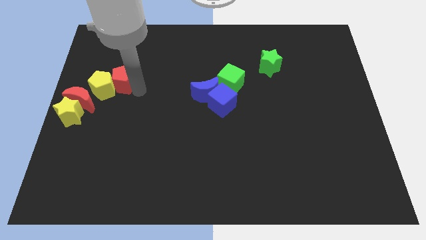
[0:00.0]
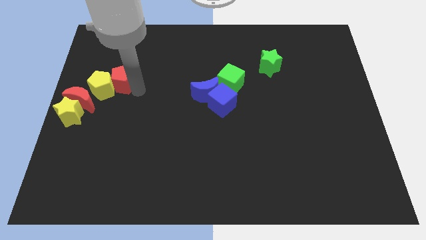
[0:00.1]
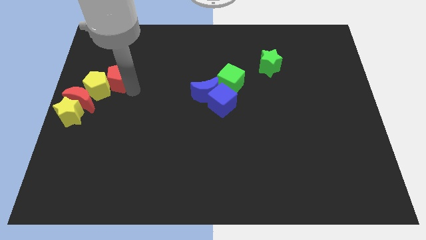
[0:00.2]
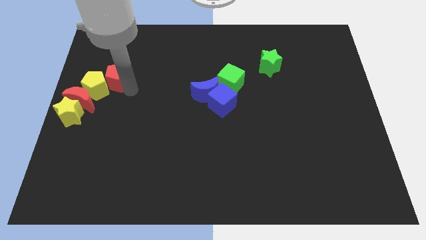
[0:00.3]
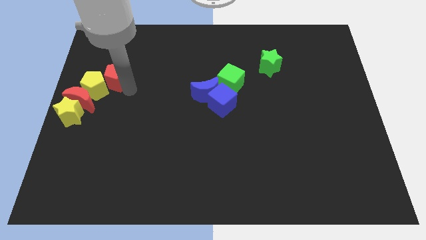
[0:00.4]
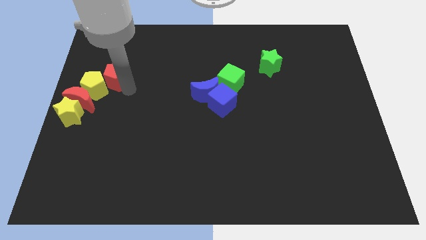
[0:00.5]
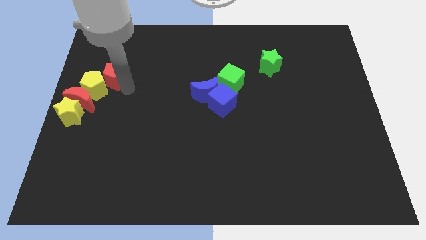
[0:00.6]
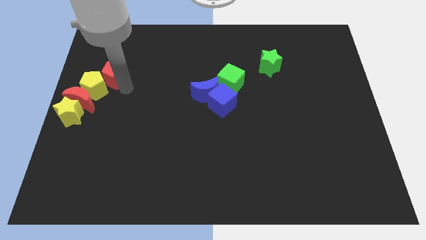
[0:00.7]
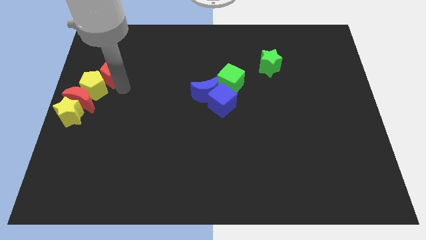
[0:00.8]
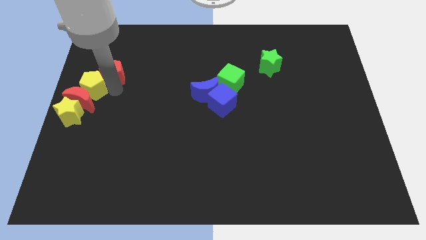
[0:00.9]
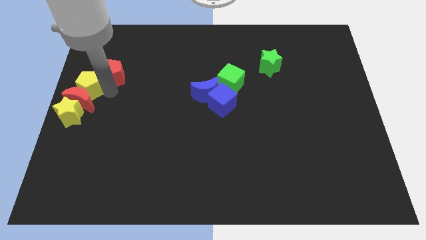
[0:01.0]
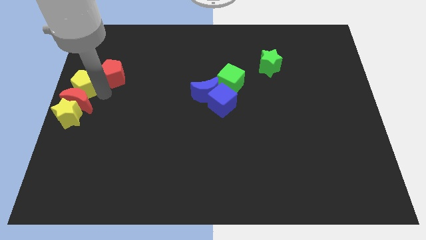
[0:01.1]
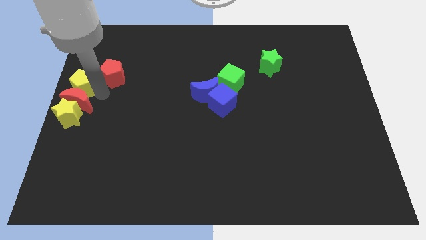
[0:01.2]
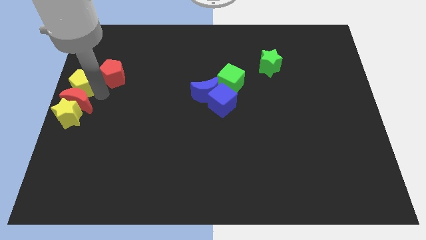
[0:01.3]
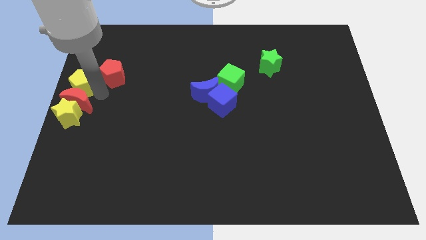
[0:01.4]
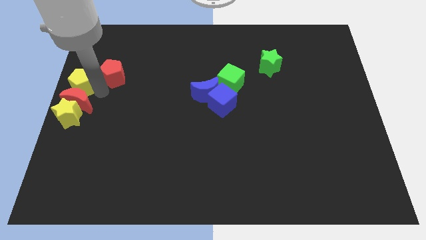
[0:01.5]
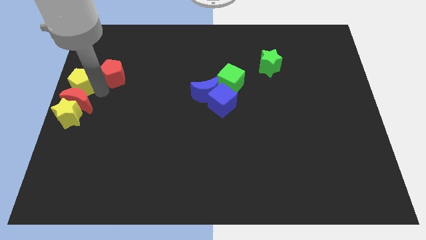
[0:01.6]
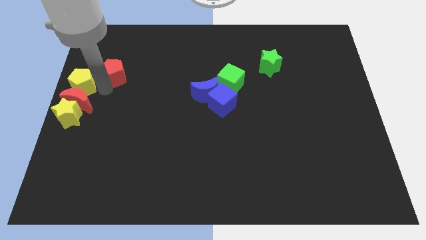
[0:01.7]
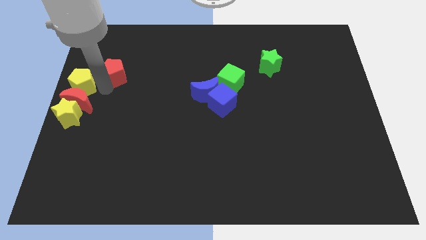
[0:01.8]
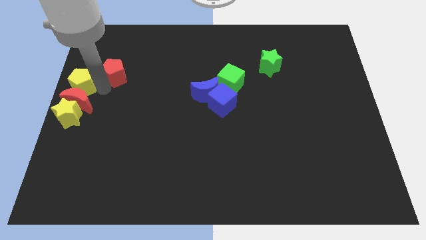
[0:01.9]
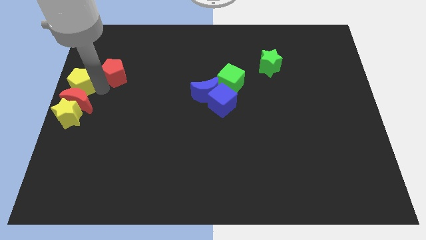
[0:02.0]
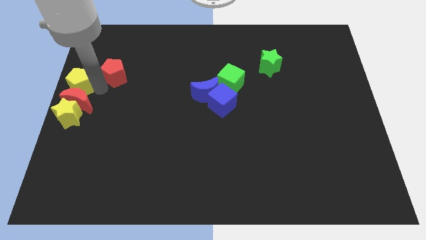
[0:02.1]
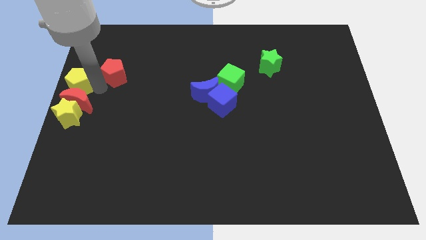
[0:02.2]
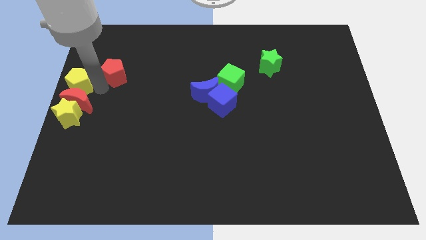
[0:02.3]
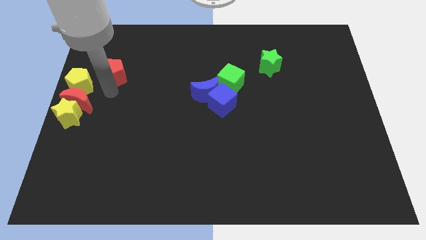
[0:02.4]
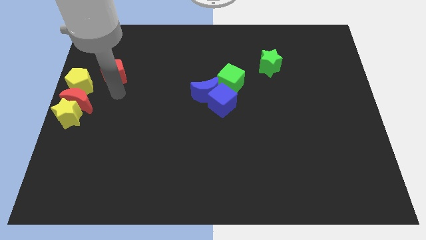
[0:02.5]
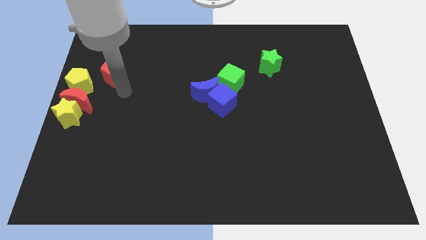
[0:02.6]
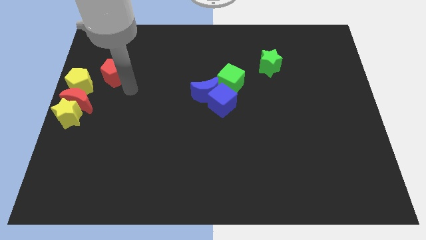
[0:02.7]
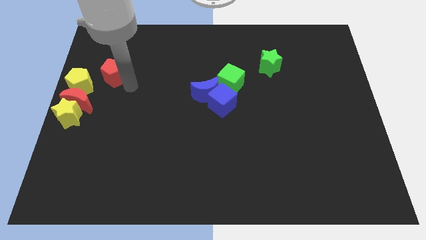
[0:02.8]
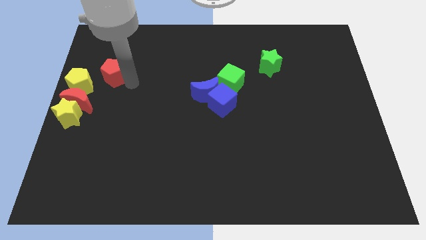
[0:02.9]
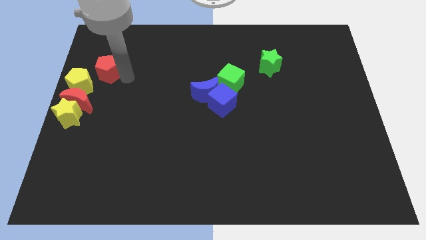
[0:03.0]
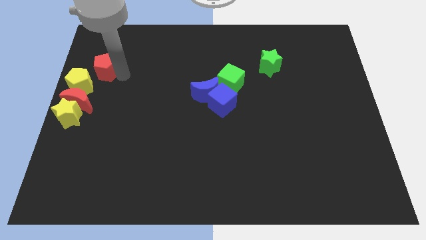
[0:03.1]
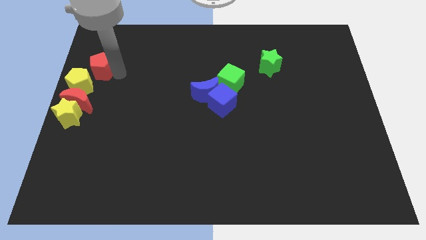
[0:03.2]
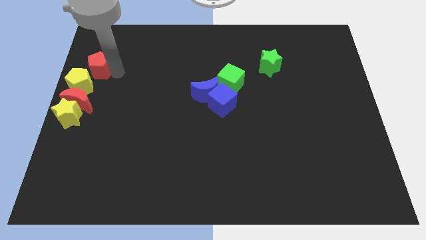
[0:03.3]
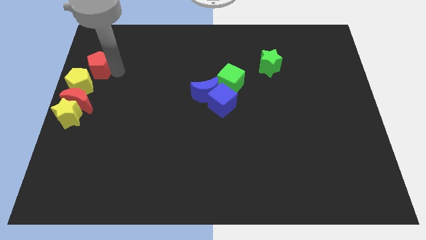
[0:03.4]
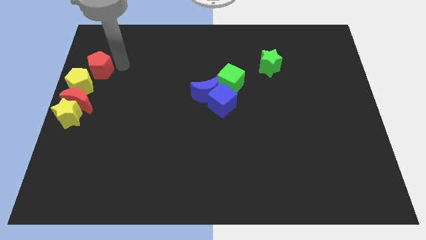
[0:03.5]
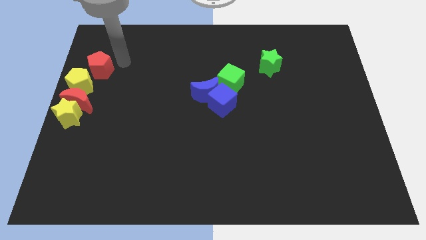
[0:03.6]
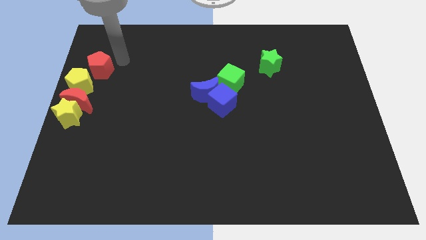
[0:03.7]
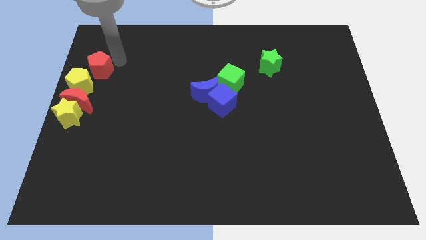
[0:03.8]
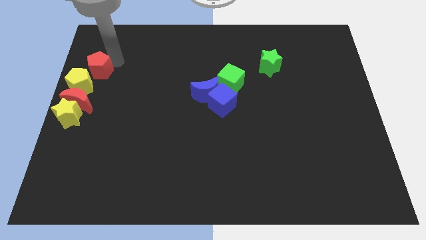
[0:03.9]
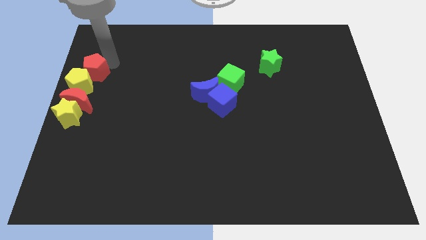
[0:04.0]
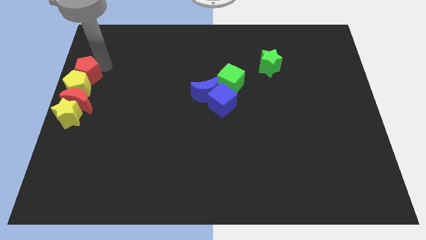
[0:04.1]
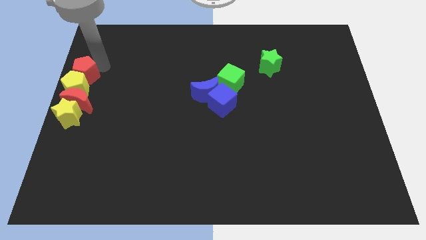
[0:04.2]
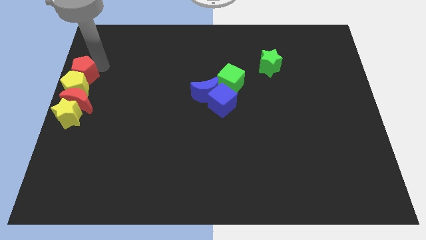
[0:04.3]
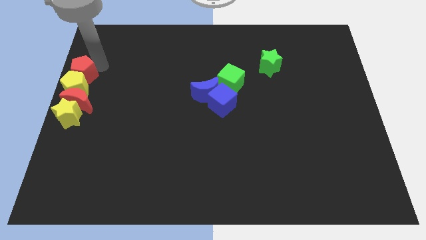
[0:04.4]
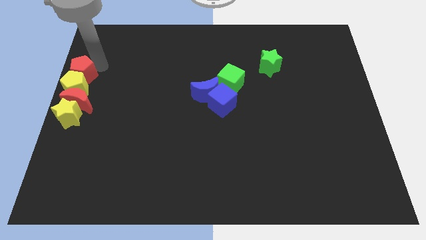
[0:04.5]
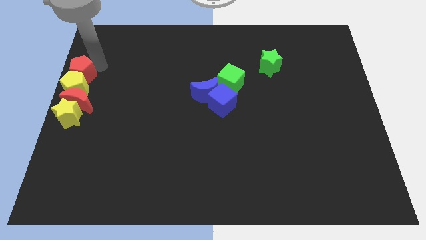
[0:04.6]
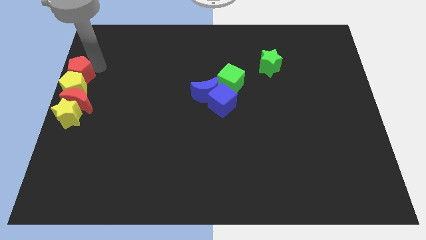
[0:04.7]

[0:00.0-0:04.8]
place the pentagons on the top of the red crescent

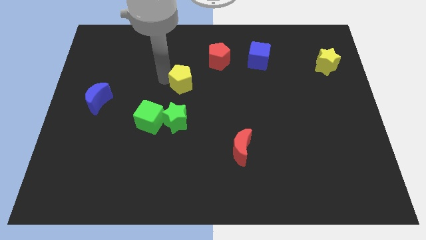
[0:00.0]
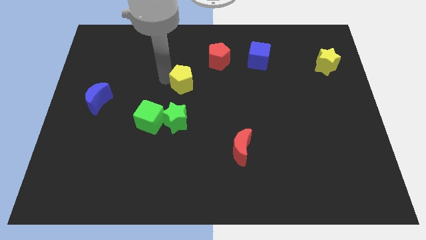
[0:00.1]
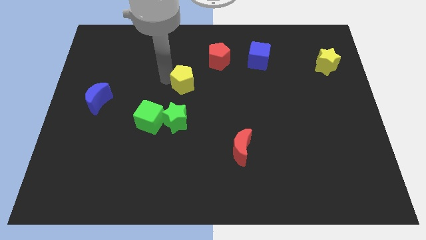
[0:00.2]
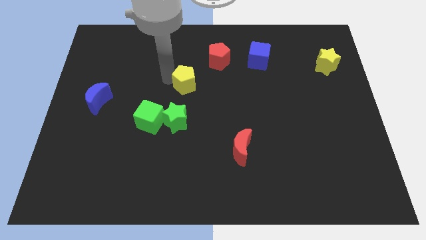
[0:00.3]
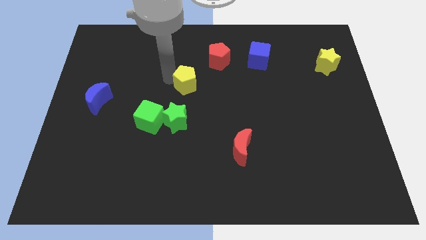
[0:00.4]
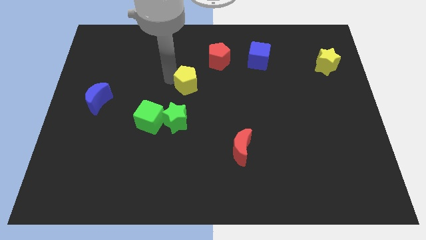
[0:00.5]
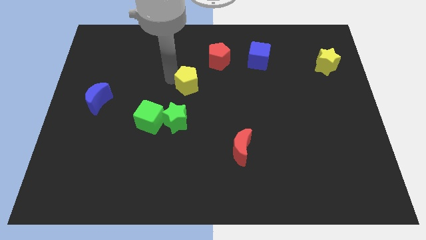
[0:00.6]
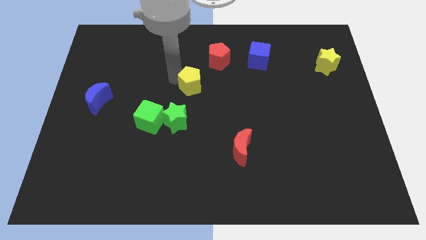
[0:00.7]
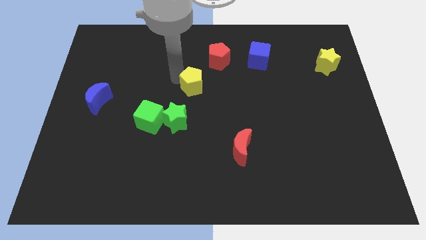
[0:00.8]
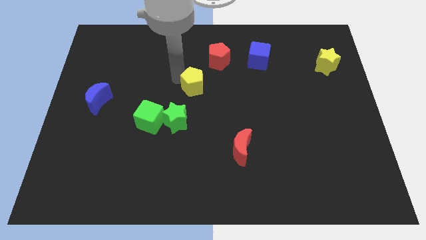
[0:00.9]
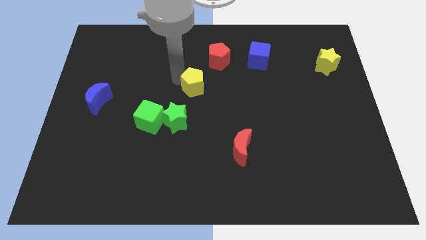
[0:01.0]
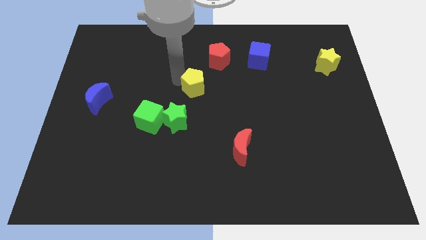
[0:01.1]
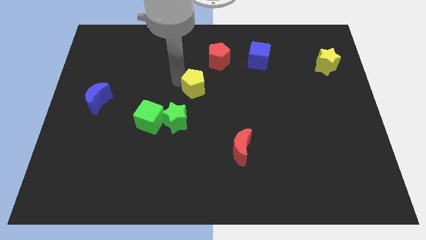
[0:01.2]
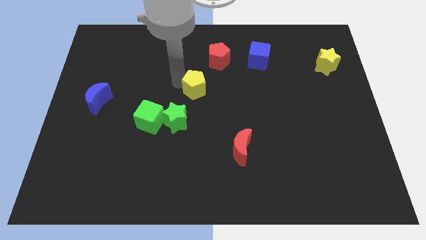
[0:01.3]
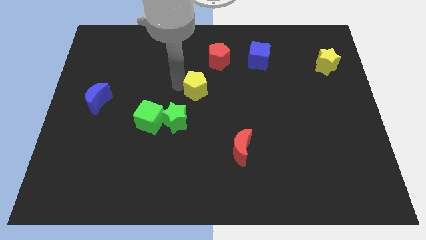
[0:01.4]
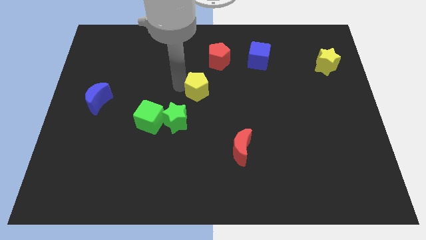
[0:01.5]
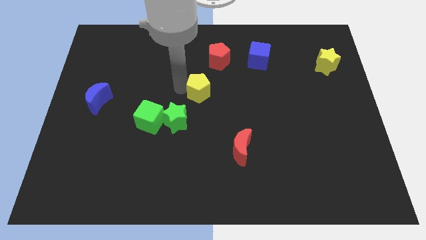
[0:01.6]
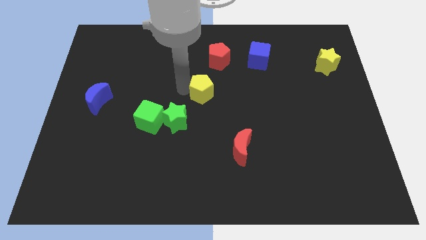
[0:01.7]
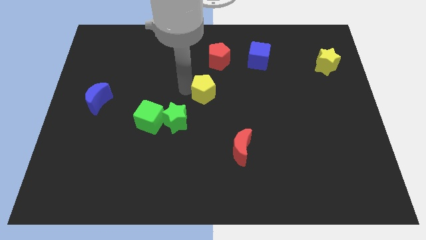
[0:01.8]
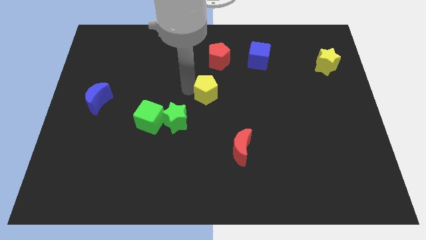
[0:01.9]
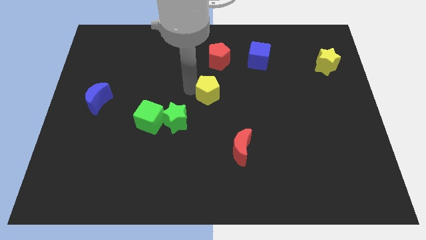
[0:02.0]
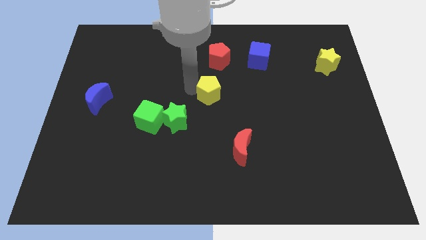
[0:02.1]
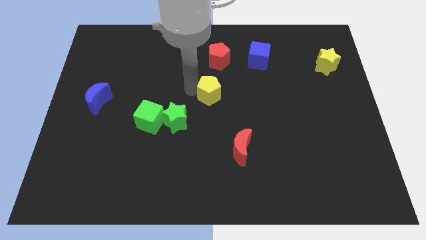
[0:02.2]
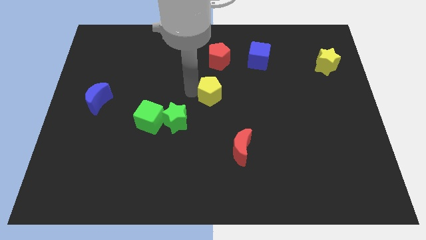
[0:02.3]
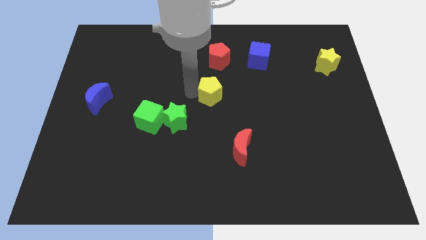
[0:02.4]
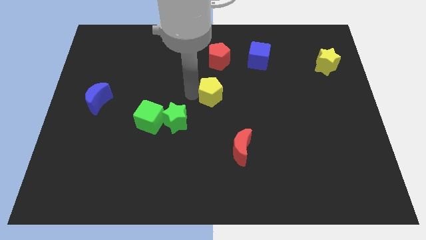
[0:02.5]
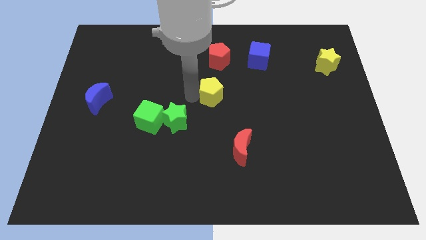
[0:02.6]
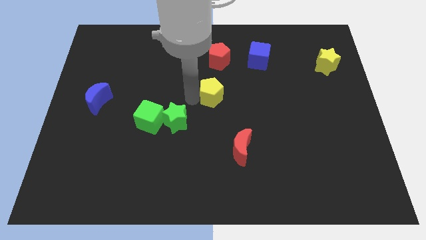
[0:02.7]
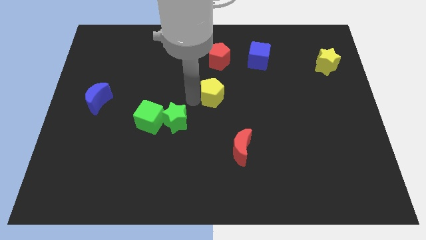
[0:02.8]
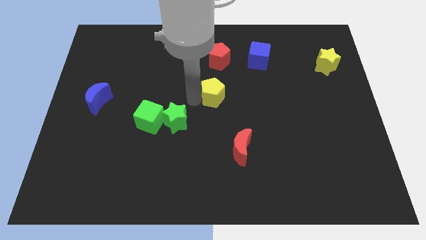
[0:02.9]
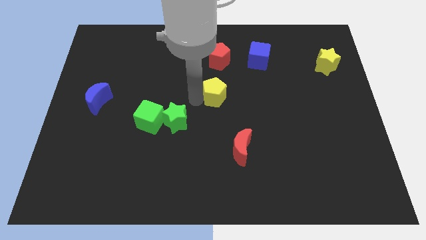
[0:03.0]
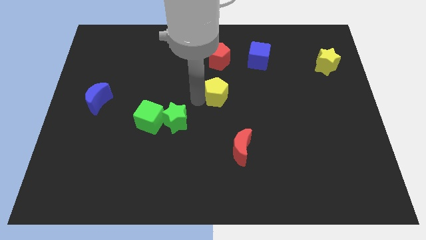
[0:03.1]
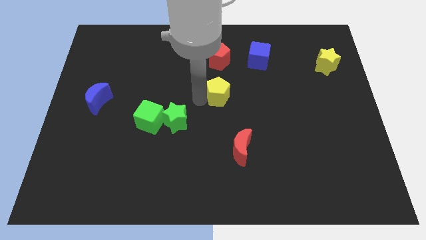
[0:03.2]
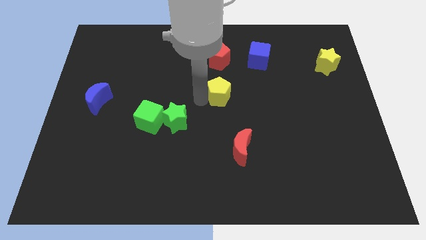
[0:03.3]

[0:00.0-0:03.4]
place the yellow pentagon below the red pentagon

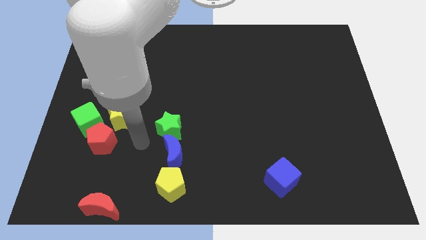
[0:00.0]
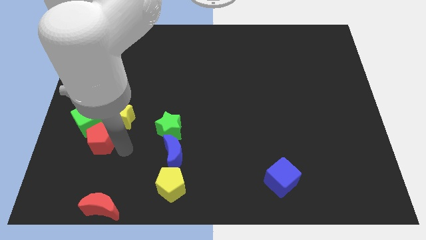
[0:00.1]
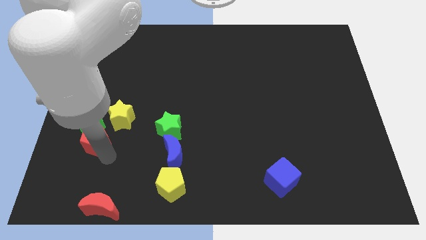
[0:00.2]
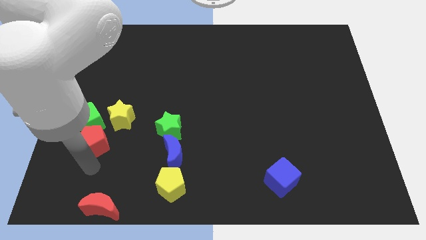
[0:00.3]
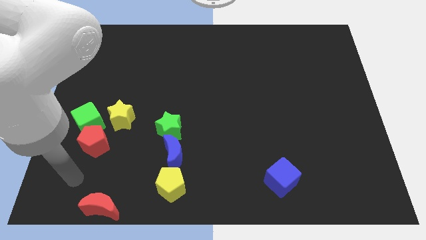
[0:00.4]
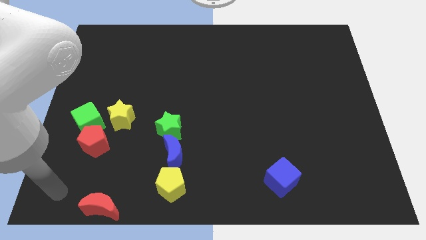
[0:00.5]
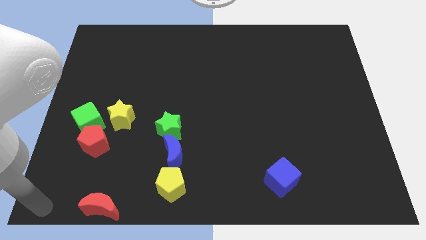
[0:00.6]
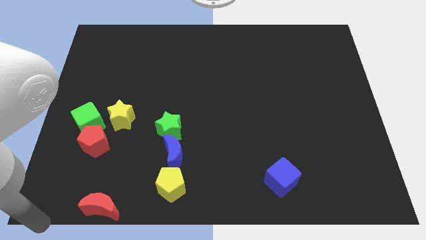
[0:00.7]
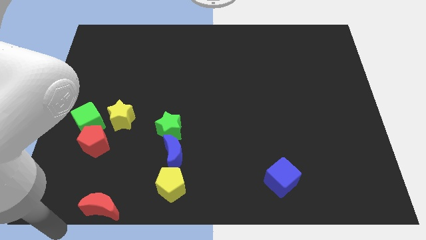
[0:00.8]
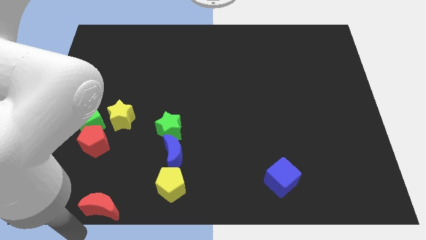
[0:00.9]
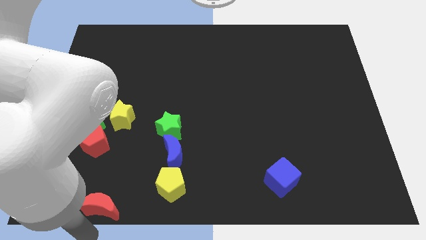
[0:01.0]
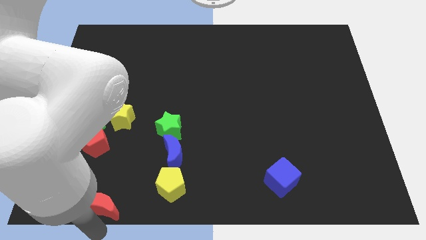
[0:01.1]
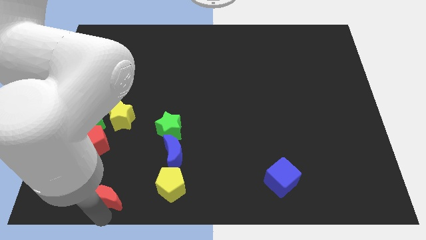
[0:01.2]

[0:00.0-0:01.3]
move the arm to the bottom of the red crescent
